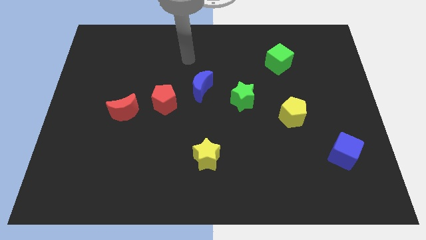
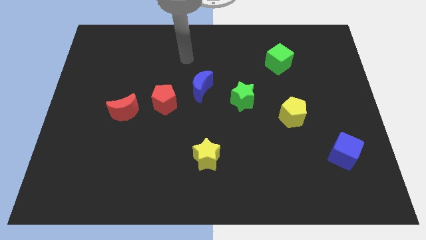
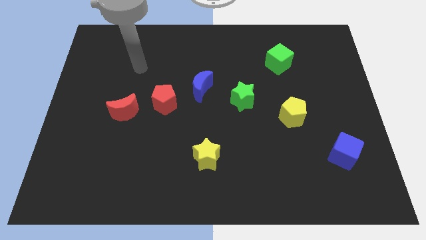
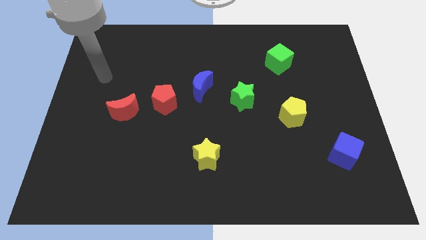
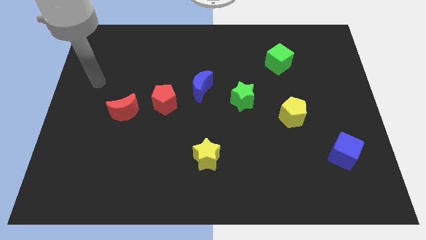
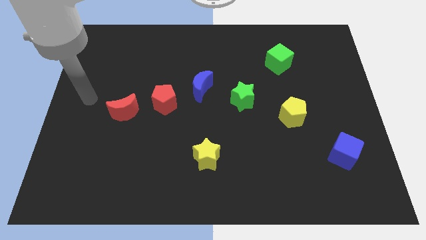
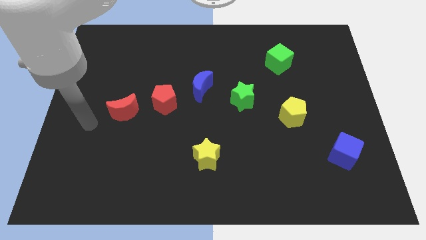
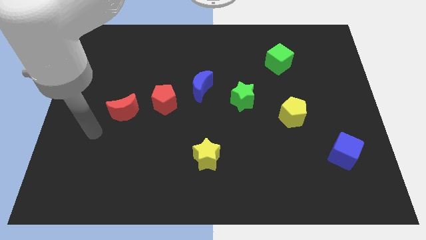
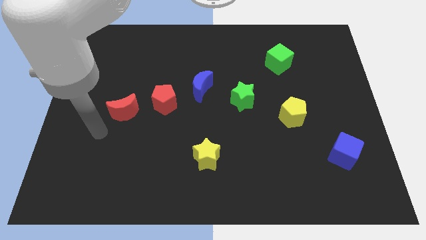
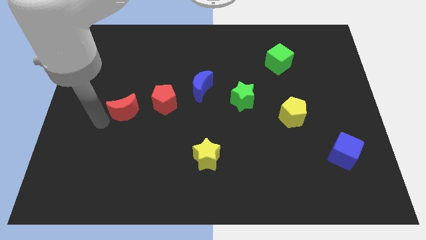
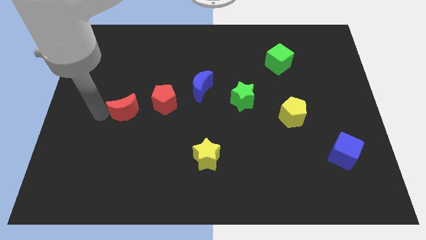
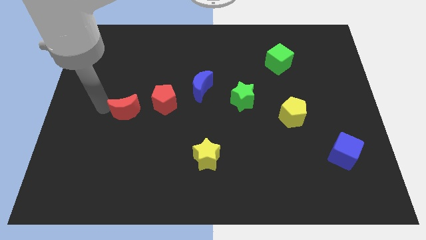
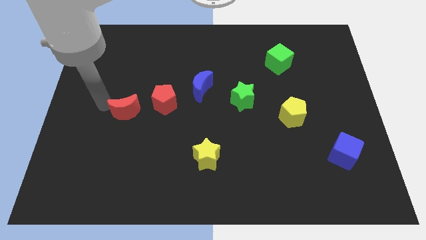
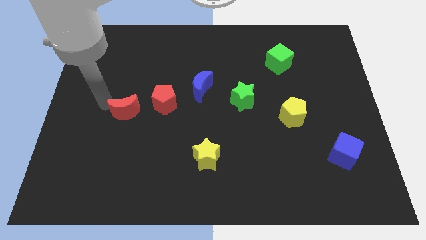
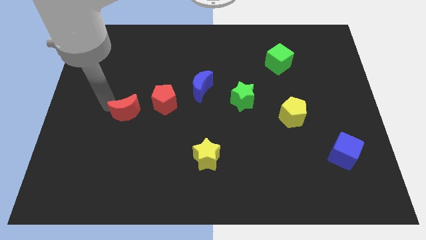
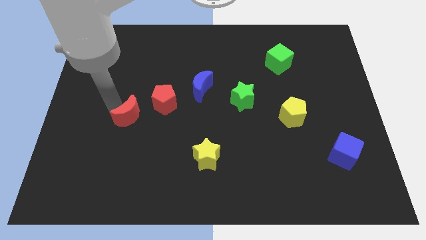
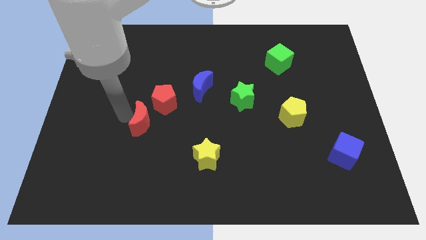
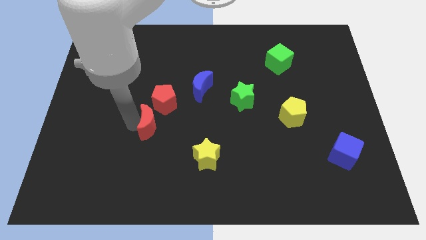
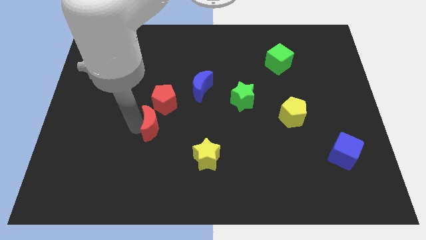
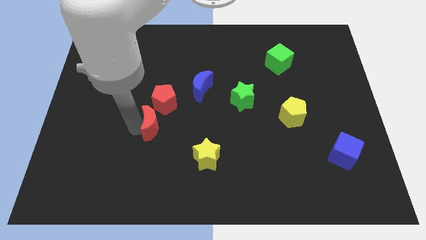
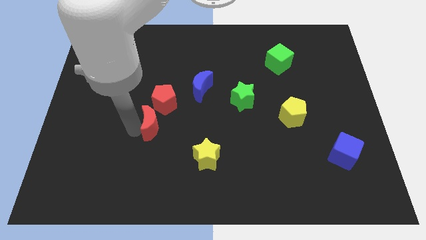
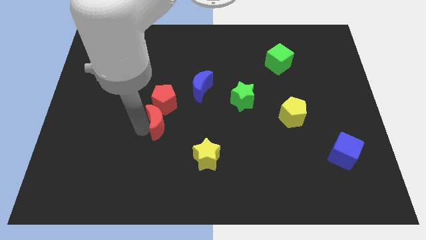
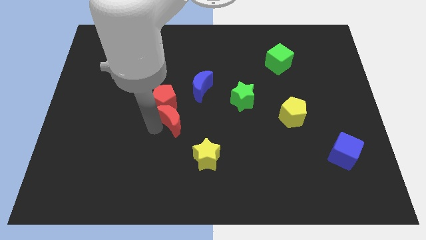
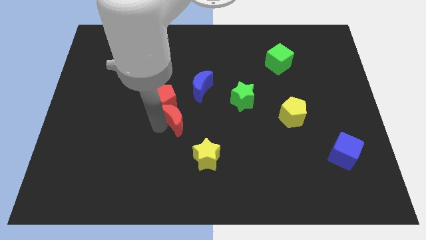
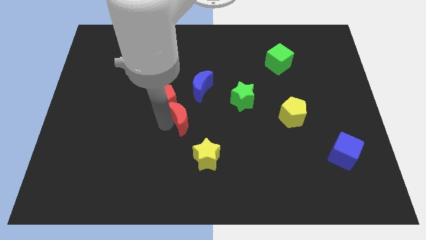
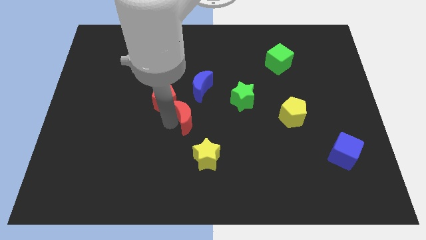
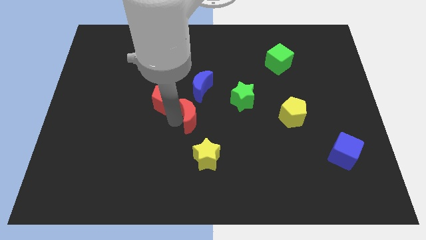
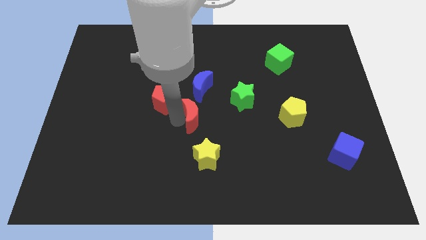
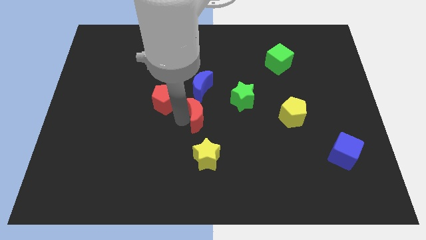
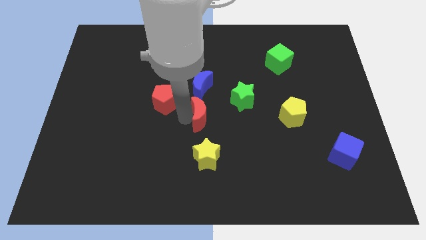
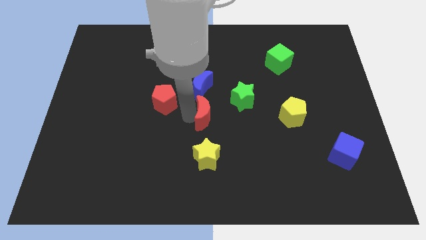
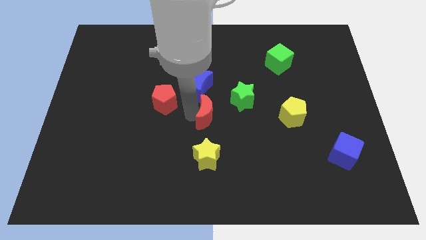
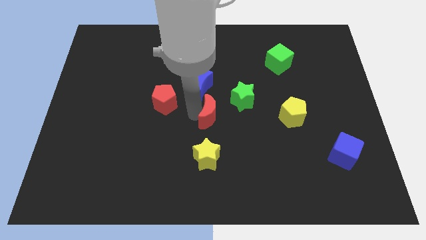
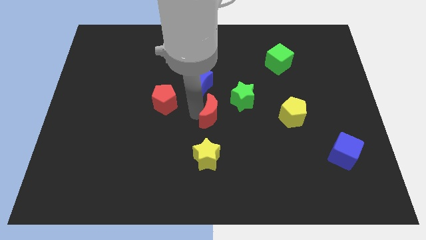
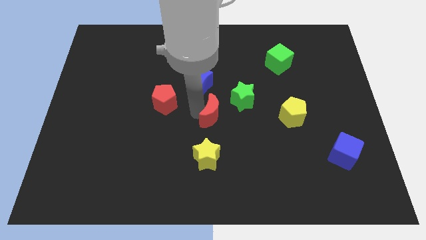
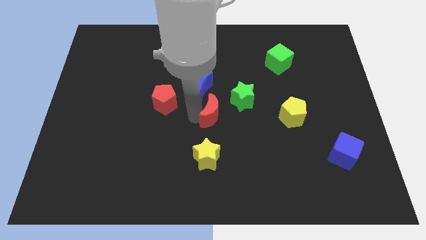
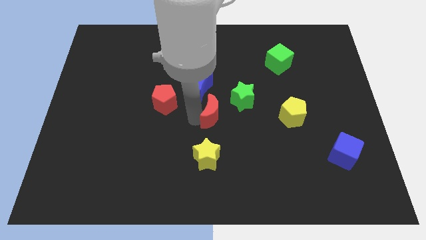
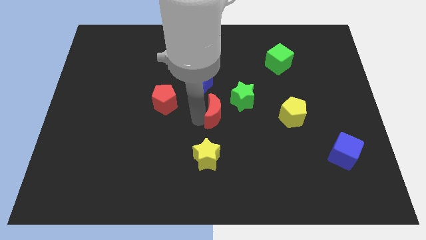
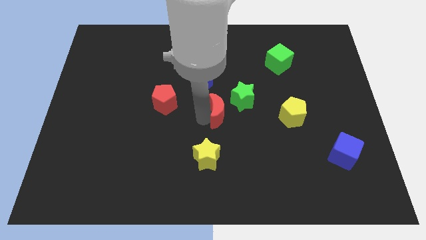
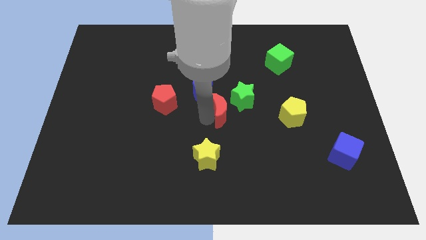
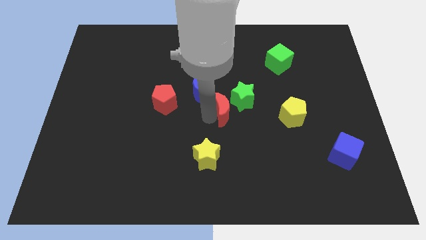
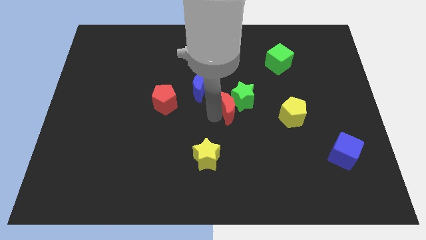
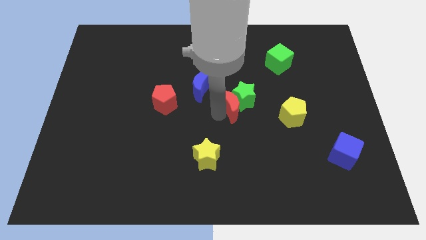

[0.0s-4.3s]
put the red moon next to the green star

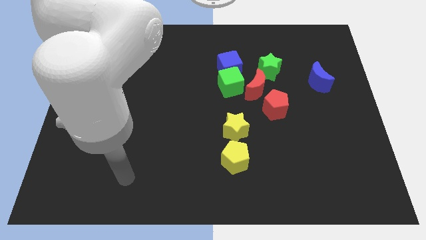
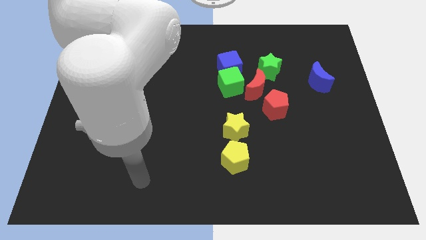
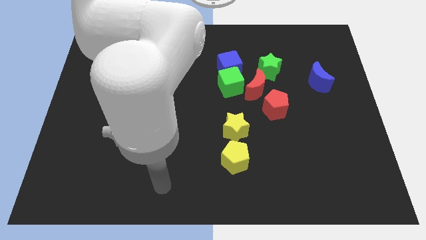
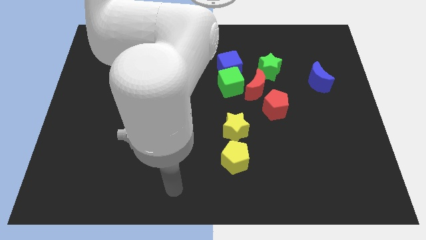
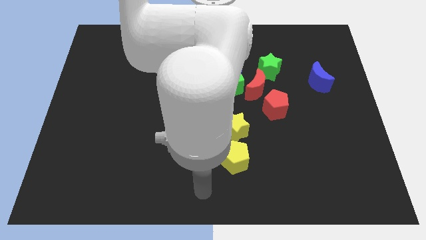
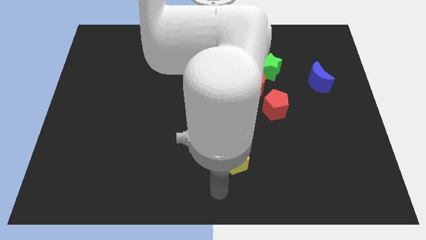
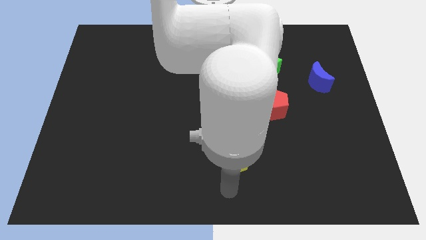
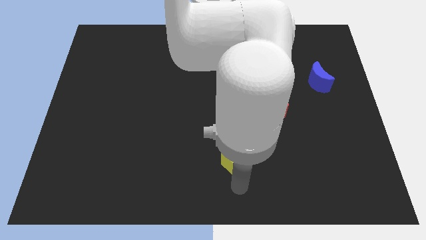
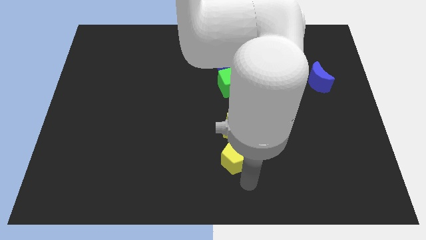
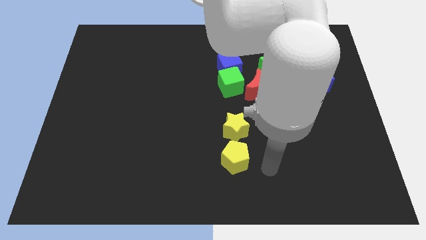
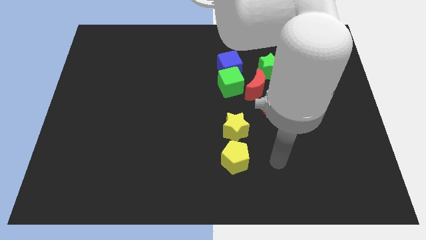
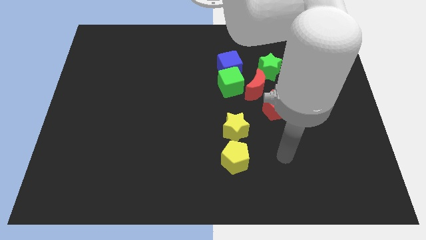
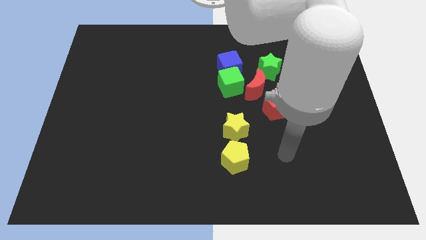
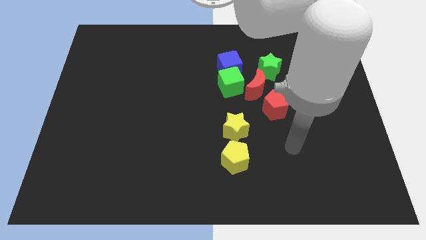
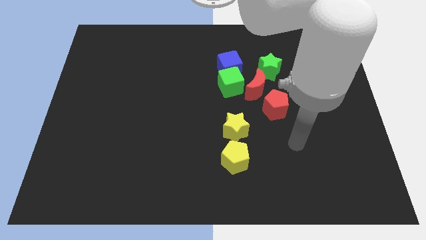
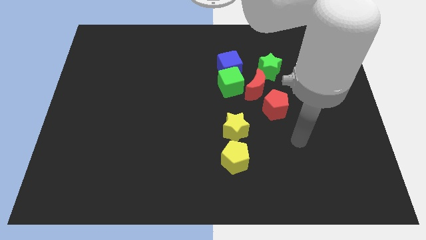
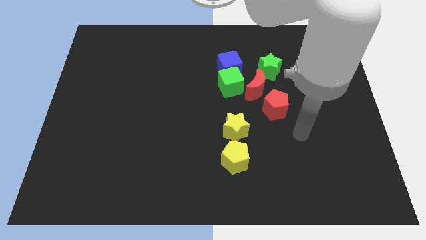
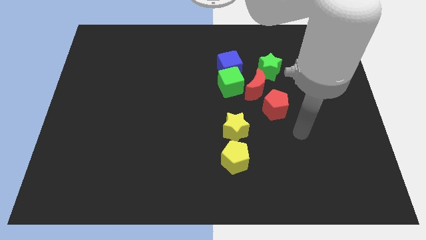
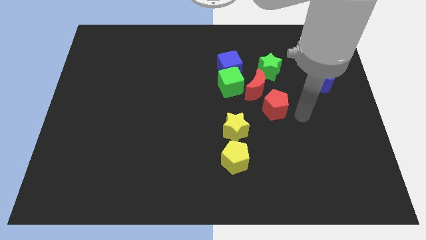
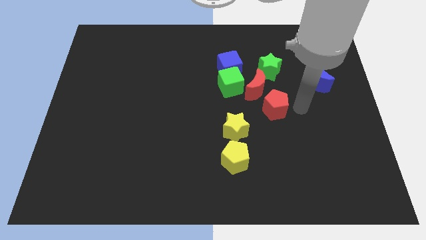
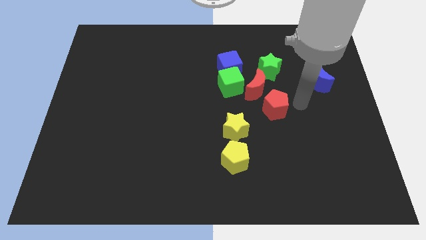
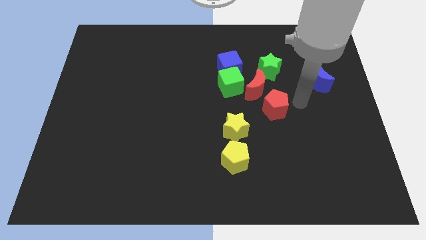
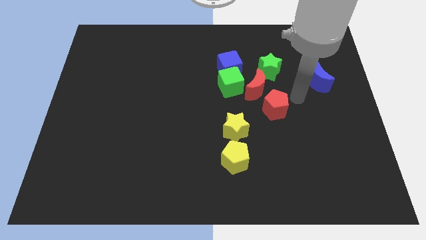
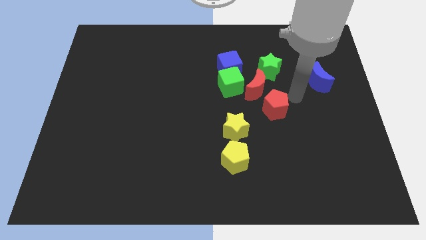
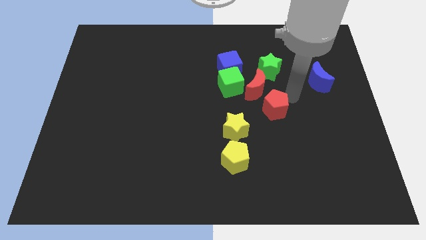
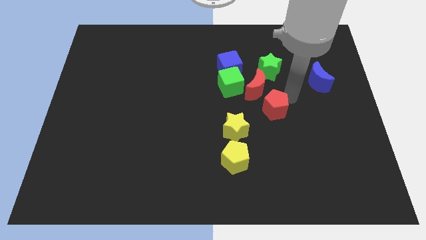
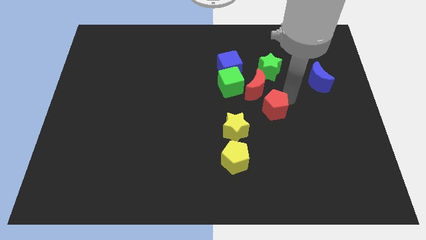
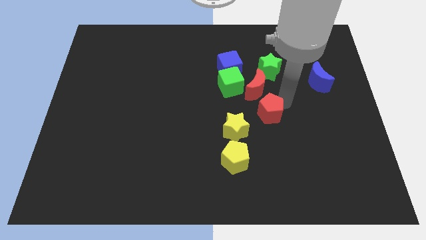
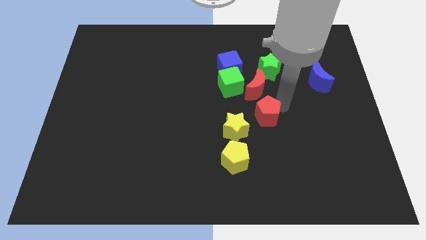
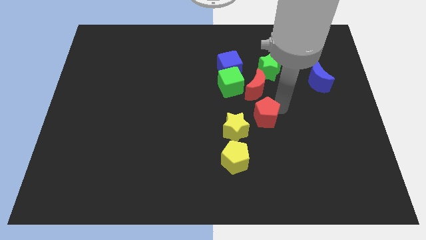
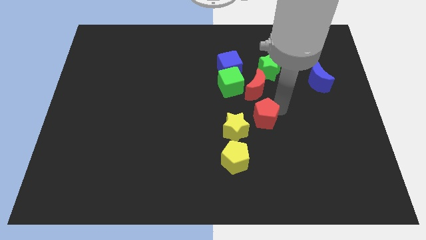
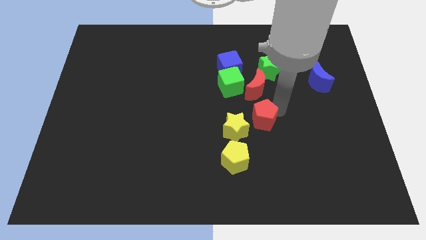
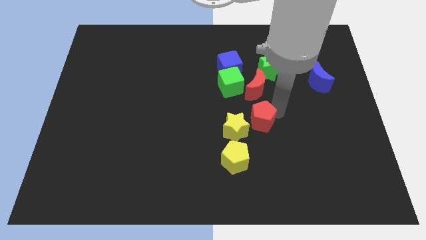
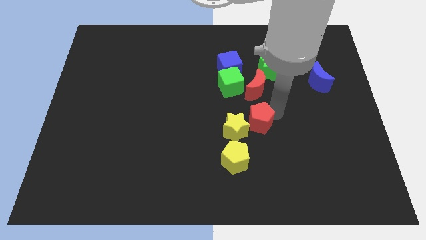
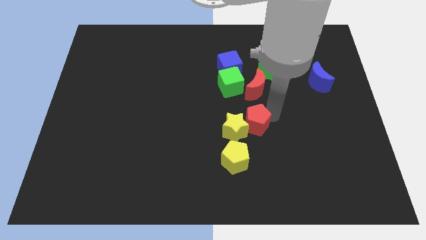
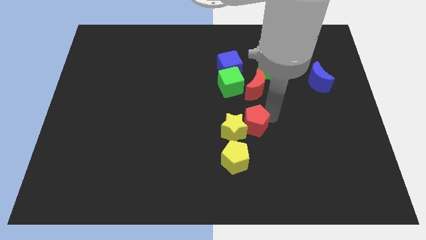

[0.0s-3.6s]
slide the red pentagon to the yellow star

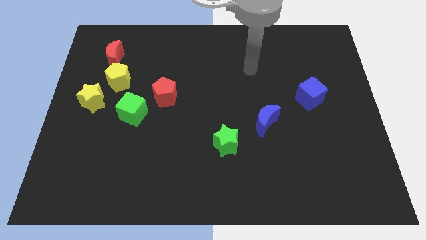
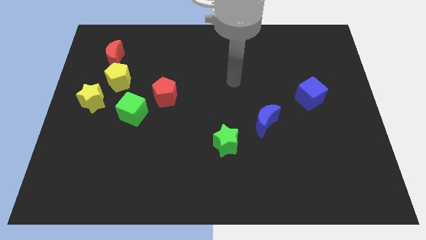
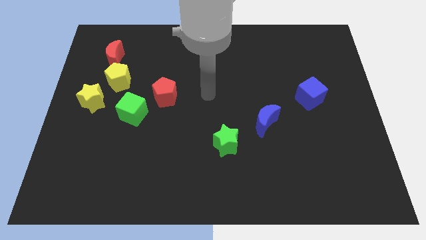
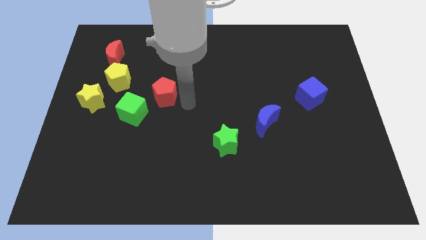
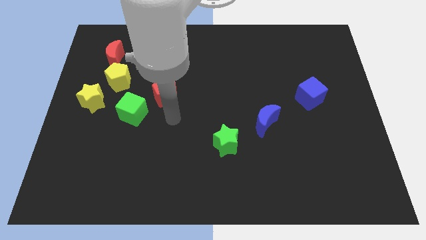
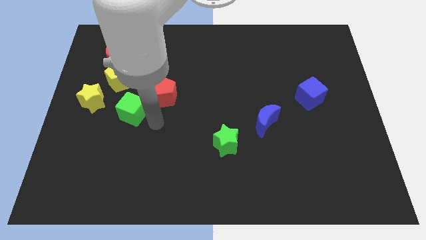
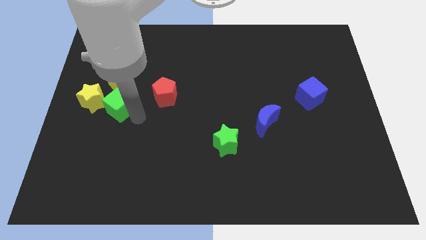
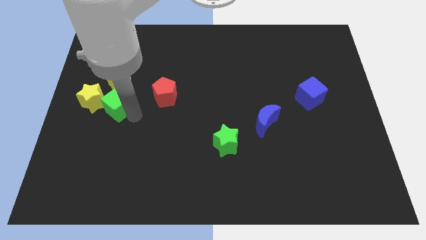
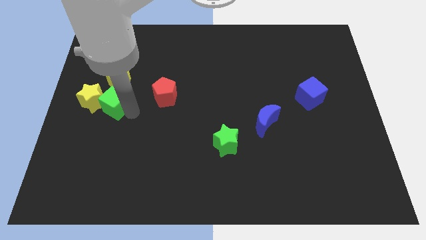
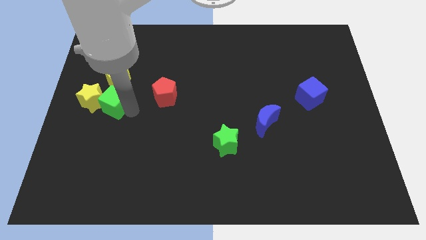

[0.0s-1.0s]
put the green cube to the yellow star
